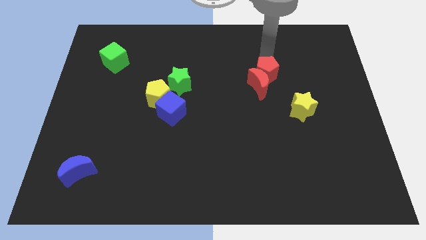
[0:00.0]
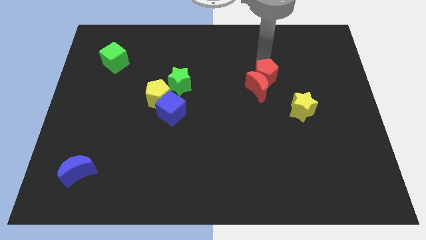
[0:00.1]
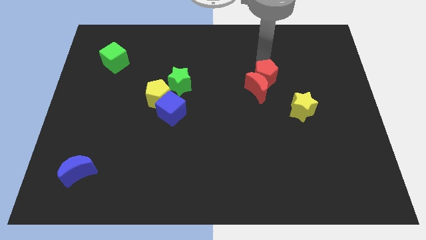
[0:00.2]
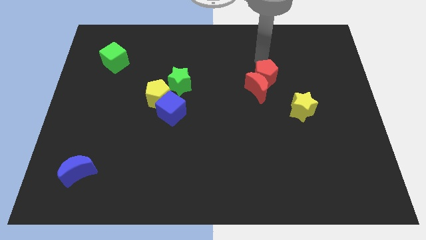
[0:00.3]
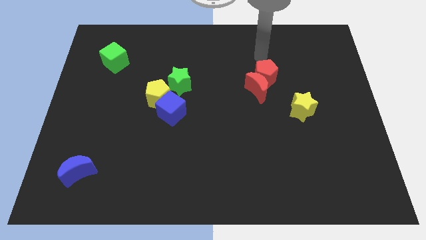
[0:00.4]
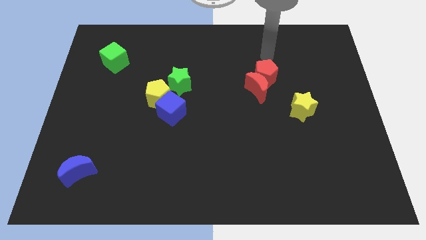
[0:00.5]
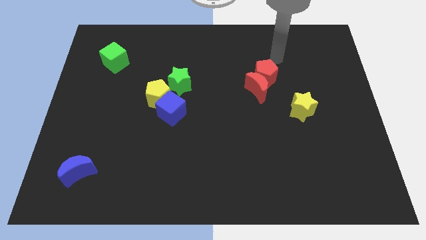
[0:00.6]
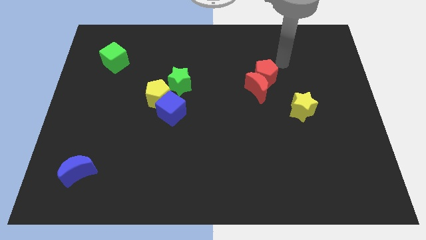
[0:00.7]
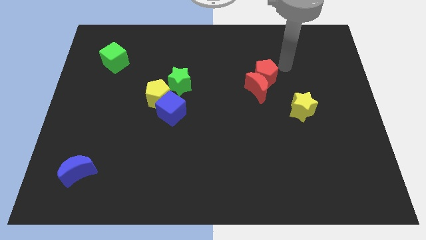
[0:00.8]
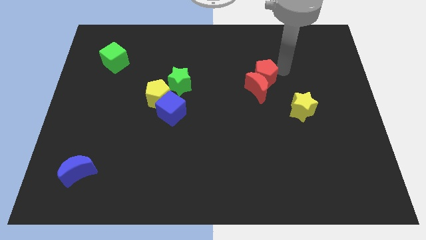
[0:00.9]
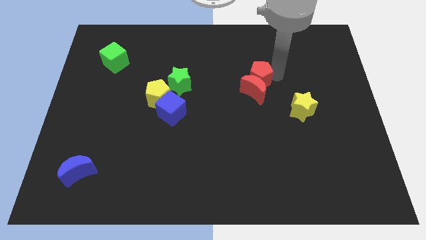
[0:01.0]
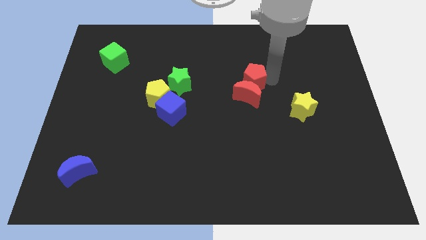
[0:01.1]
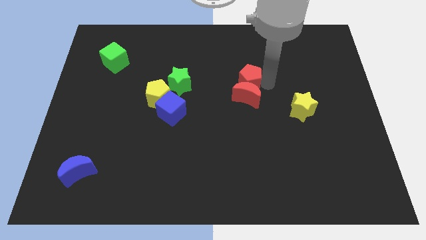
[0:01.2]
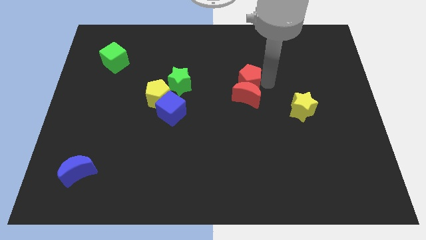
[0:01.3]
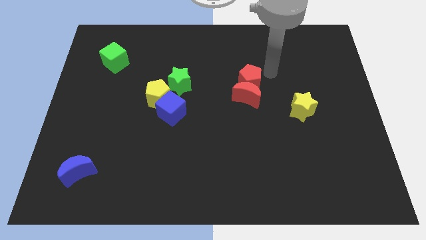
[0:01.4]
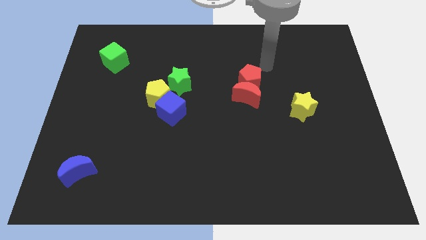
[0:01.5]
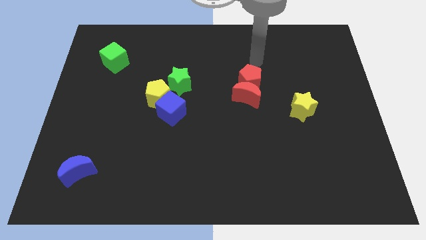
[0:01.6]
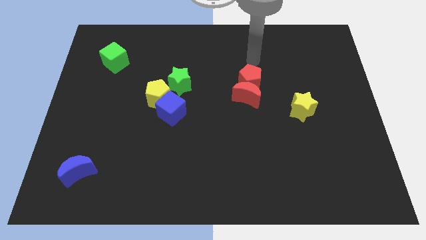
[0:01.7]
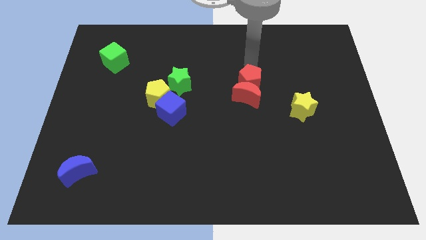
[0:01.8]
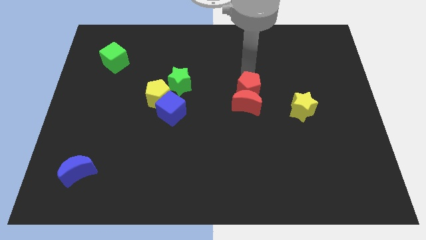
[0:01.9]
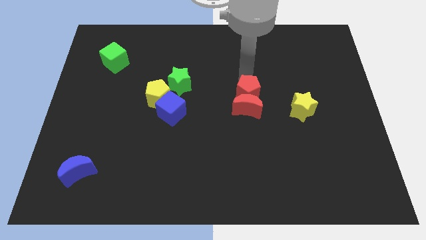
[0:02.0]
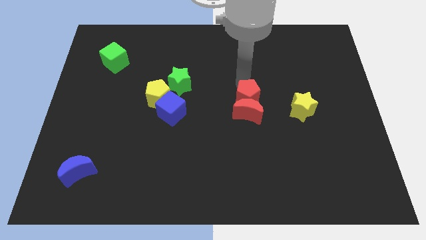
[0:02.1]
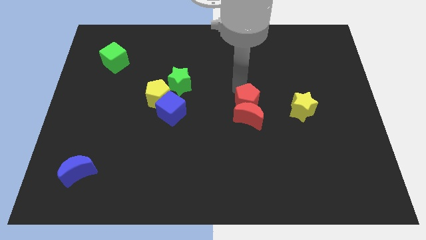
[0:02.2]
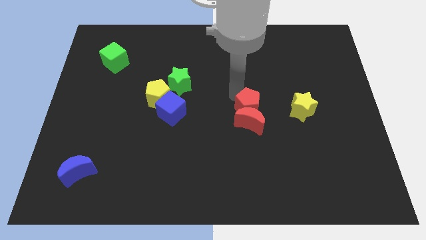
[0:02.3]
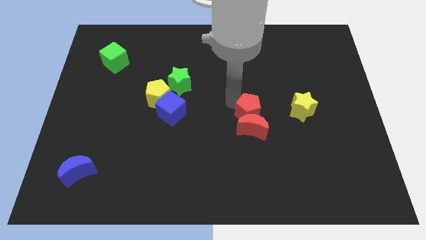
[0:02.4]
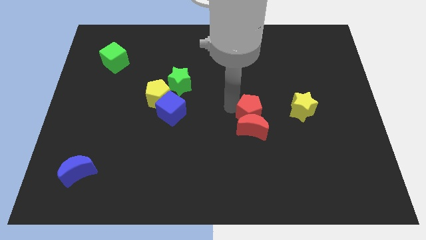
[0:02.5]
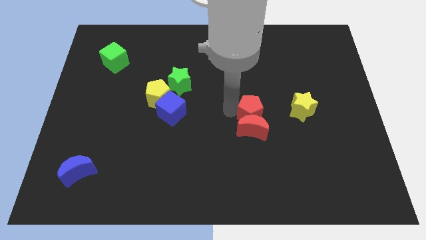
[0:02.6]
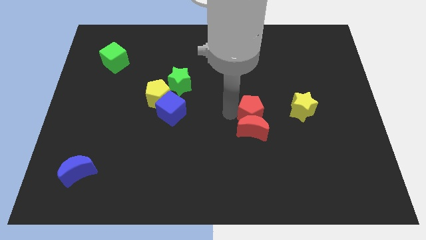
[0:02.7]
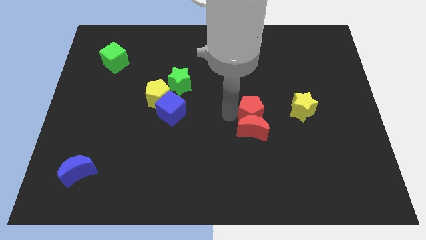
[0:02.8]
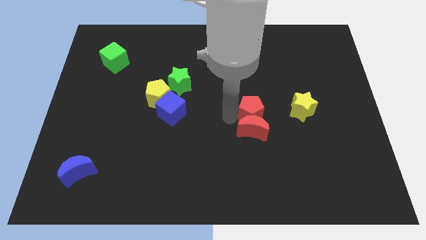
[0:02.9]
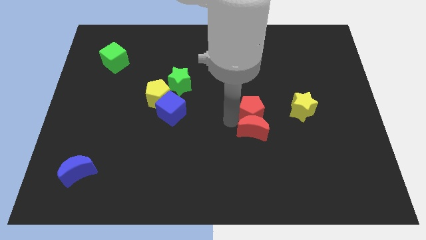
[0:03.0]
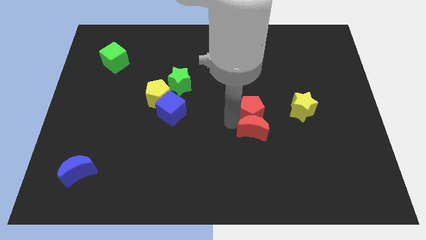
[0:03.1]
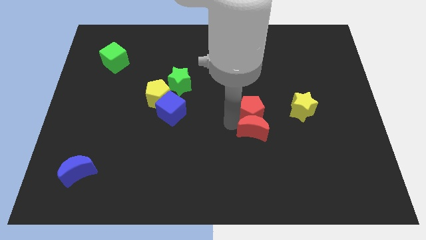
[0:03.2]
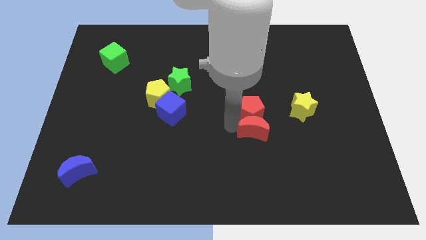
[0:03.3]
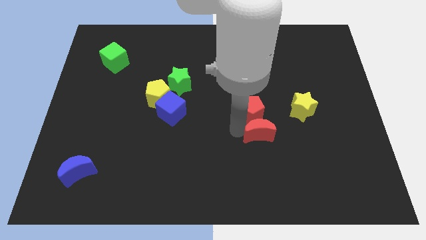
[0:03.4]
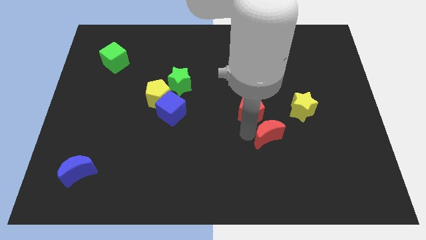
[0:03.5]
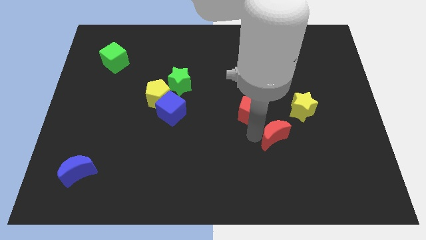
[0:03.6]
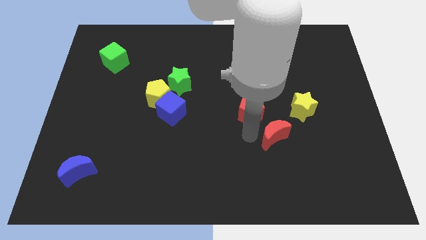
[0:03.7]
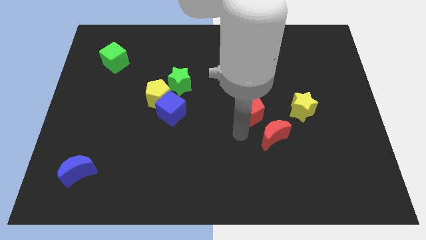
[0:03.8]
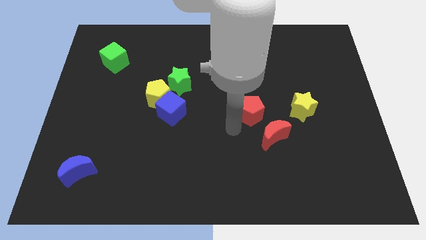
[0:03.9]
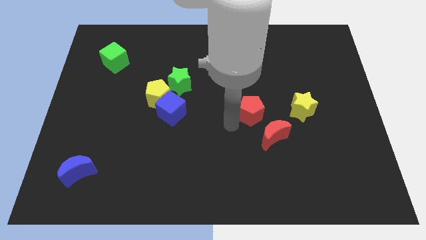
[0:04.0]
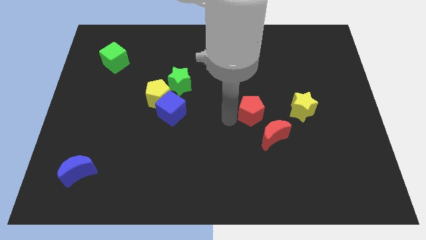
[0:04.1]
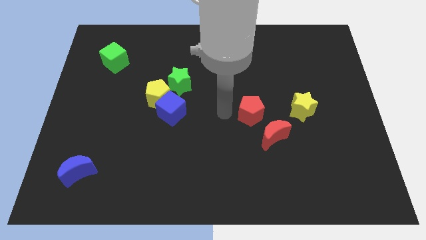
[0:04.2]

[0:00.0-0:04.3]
move the red pentagon in between the yellow star and the blue cube horizontally

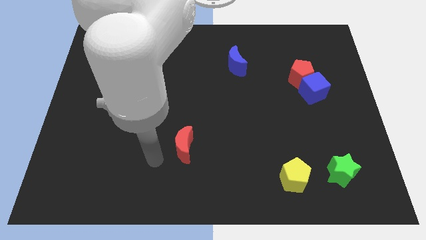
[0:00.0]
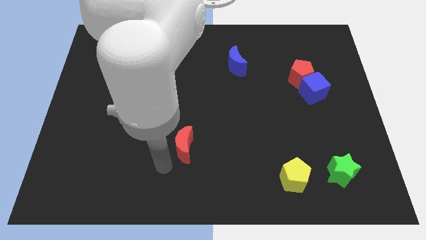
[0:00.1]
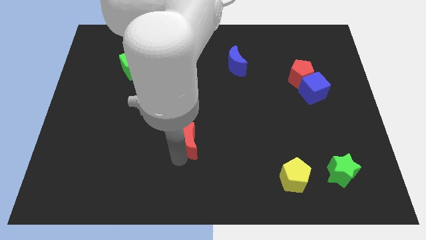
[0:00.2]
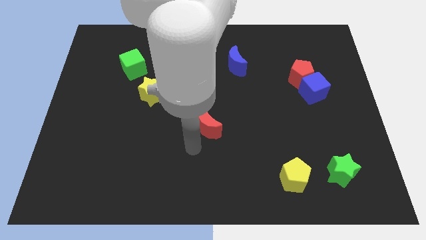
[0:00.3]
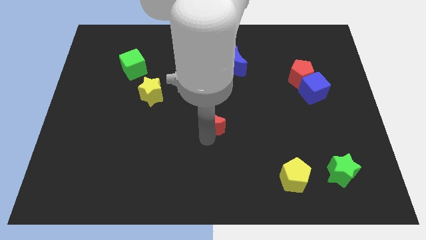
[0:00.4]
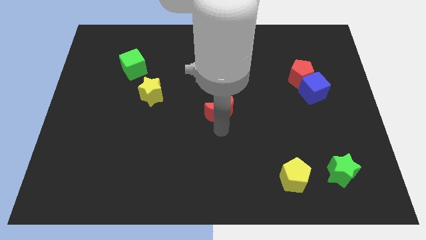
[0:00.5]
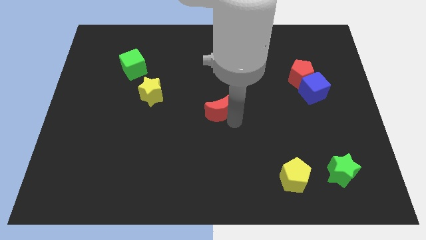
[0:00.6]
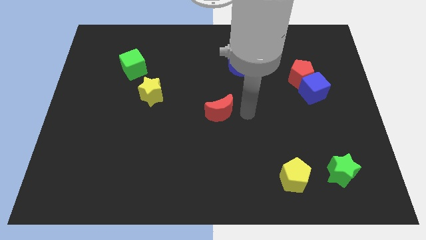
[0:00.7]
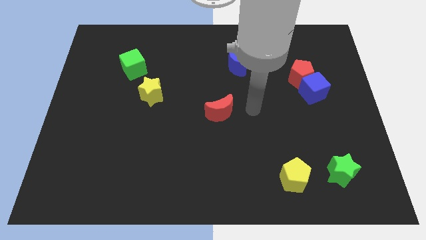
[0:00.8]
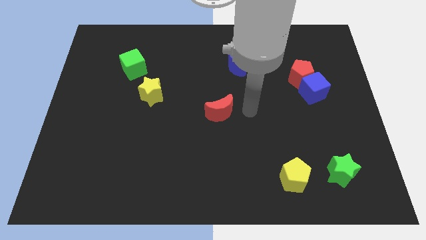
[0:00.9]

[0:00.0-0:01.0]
push the red crescent to the top of the board

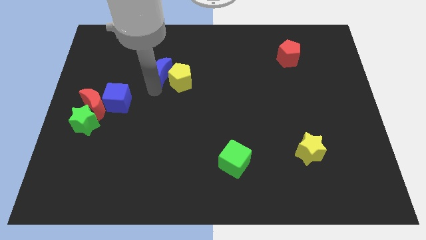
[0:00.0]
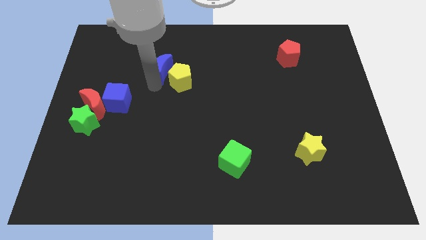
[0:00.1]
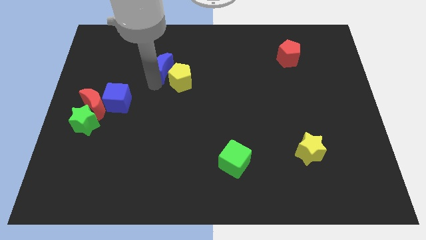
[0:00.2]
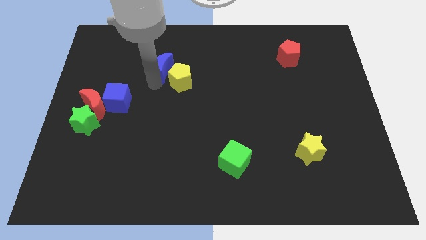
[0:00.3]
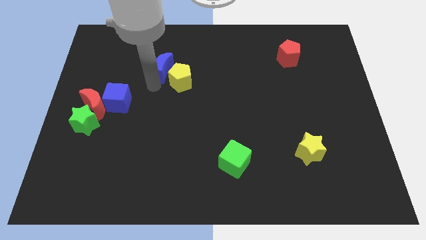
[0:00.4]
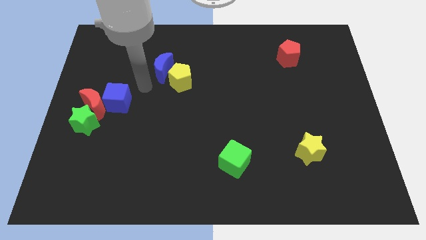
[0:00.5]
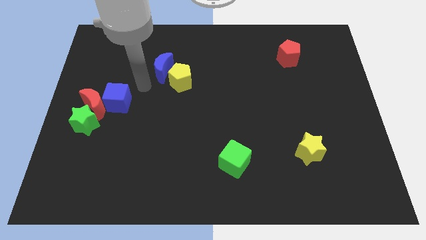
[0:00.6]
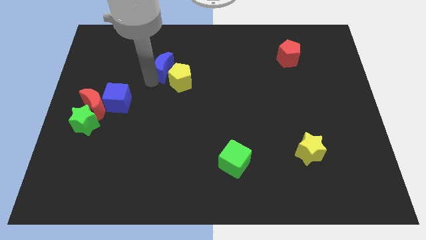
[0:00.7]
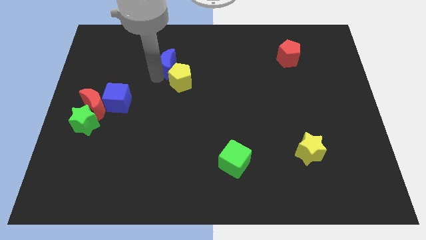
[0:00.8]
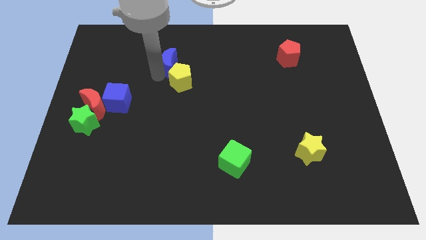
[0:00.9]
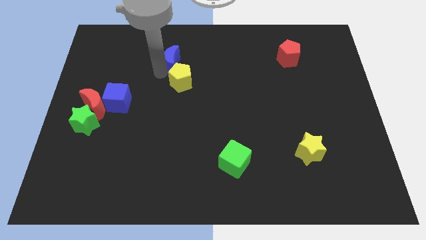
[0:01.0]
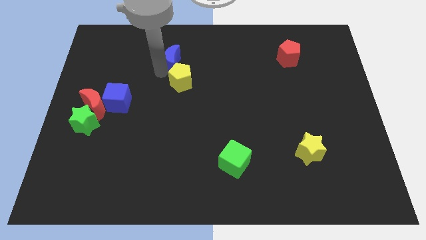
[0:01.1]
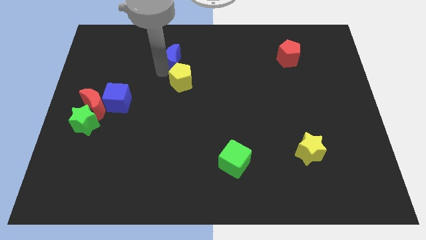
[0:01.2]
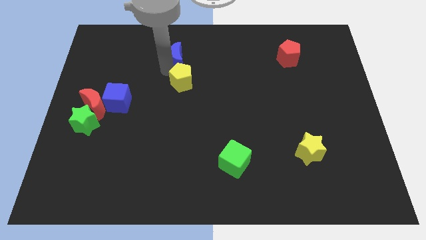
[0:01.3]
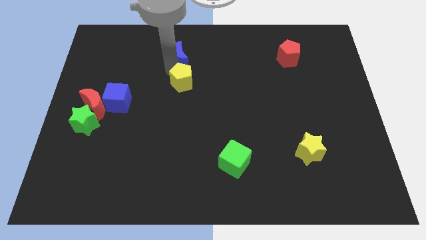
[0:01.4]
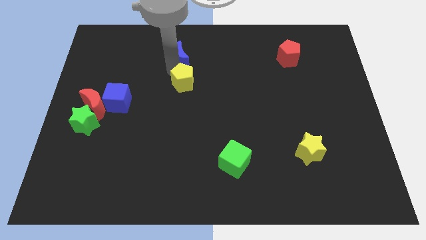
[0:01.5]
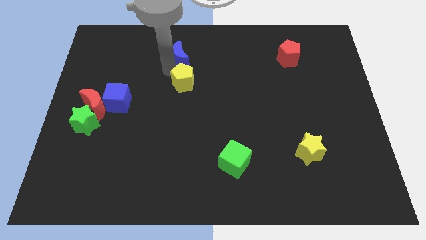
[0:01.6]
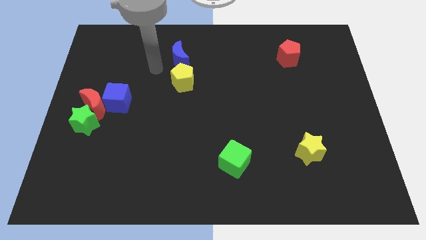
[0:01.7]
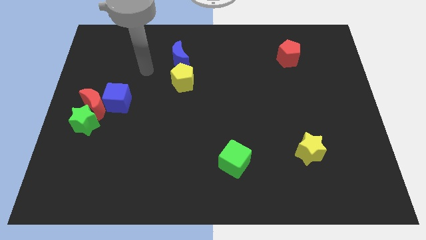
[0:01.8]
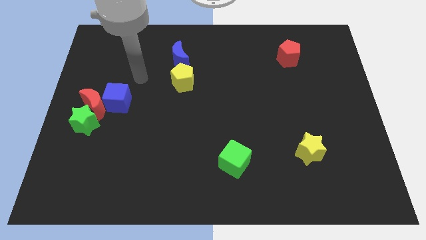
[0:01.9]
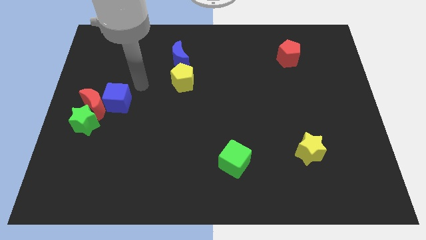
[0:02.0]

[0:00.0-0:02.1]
push the blue crescent towards the top side of the board

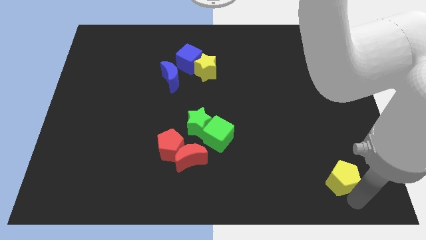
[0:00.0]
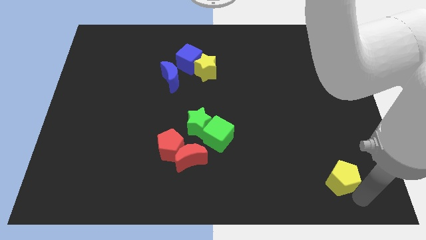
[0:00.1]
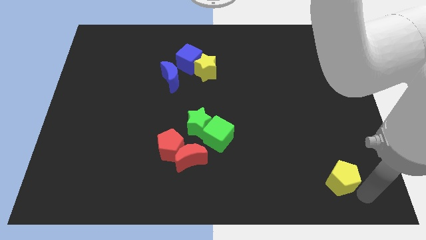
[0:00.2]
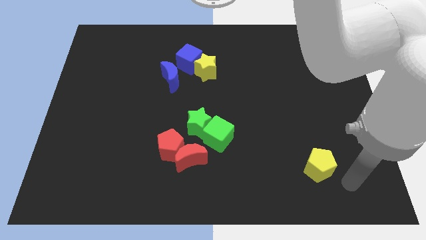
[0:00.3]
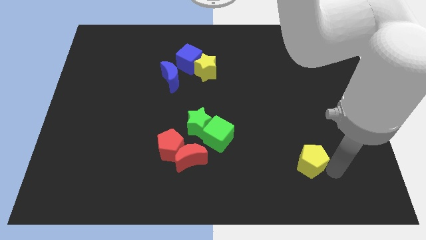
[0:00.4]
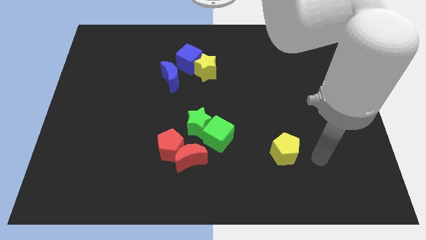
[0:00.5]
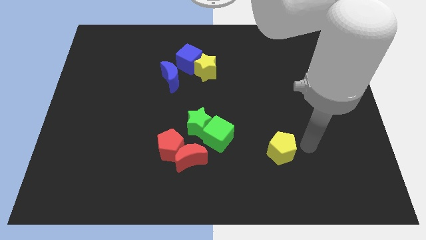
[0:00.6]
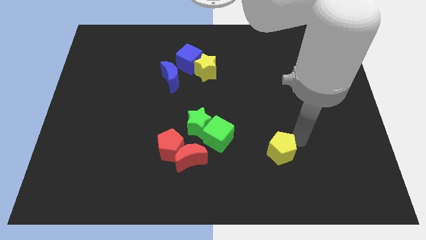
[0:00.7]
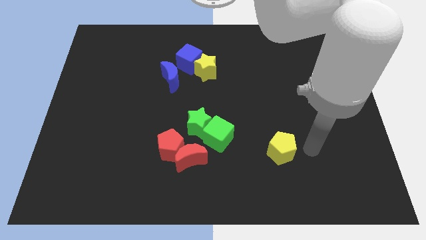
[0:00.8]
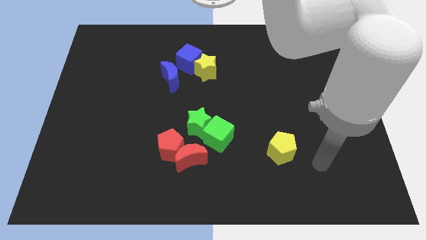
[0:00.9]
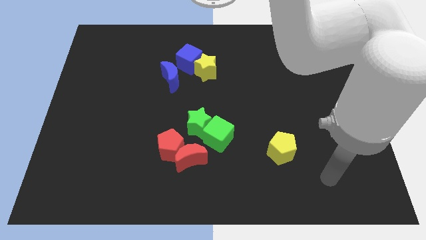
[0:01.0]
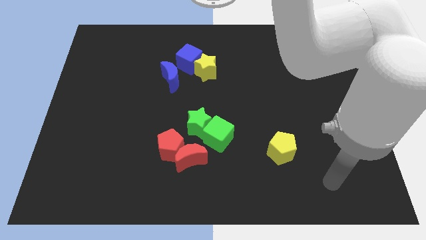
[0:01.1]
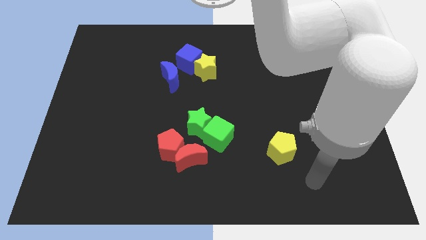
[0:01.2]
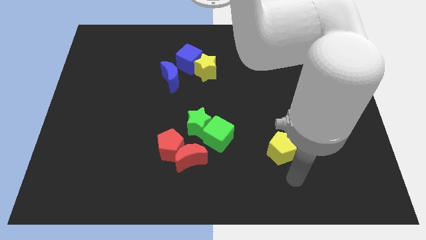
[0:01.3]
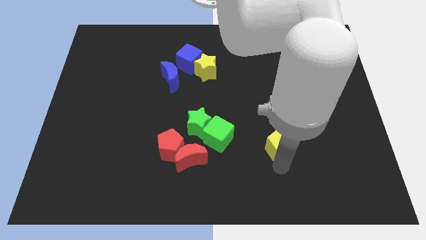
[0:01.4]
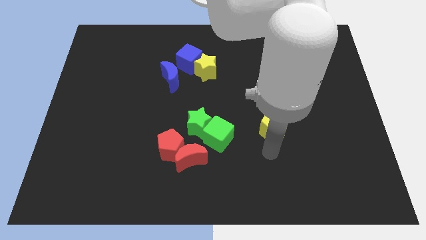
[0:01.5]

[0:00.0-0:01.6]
move the yellow pentagon to the right of green cube

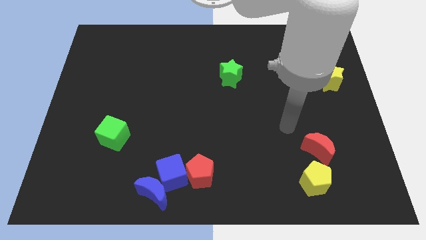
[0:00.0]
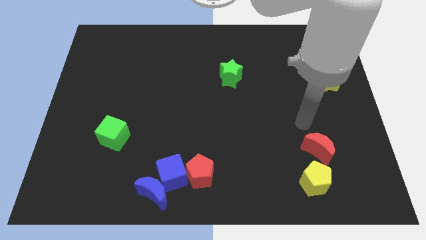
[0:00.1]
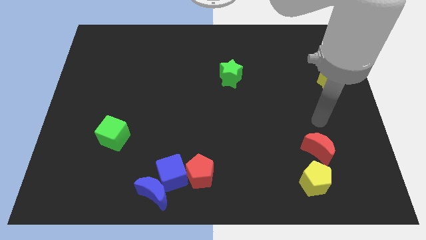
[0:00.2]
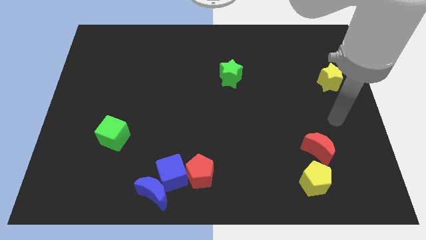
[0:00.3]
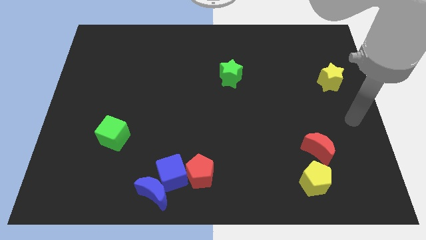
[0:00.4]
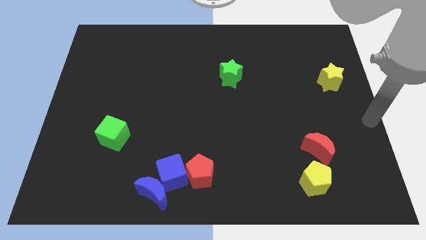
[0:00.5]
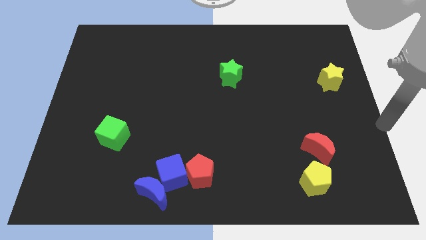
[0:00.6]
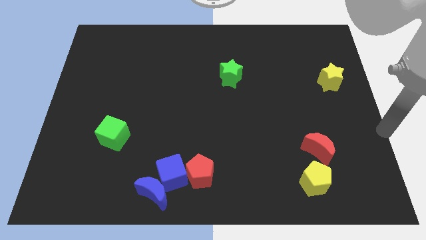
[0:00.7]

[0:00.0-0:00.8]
move the arm towards the right side of the board
